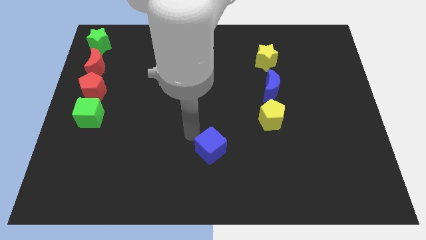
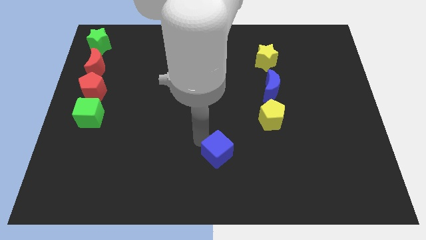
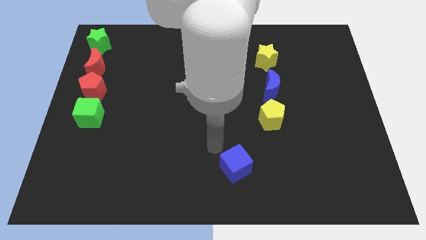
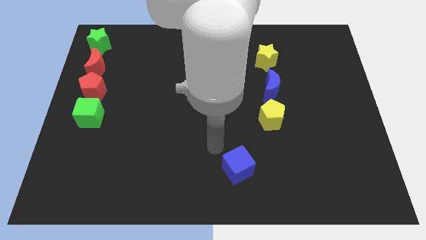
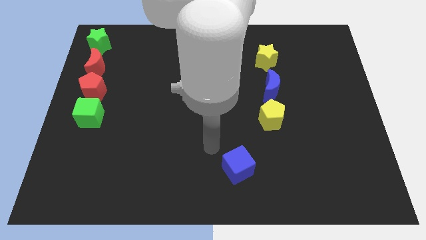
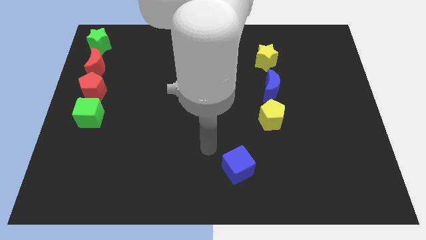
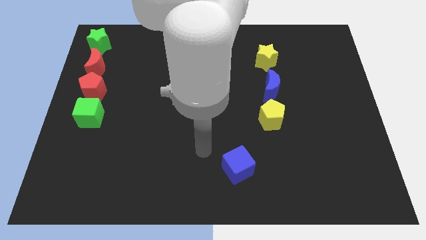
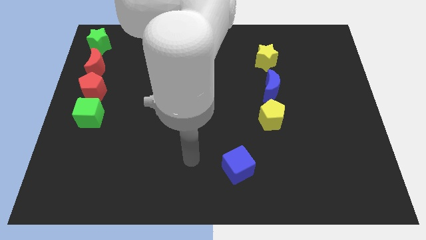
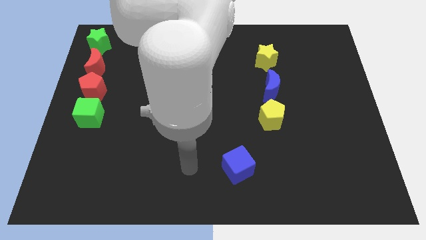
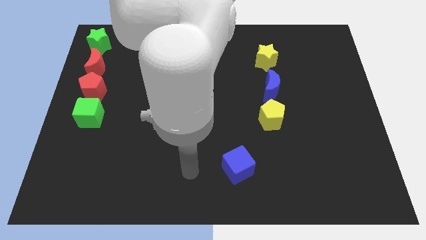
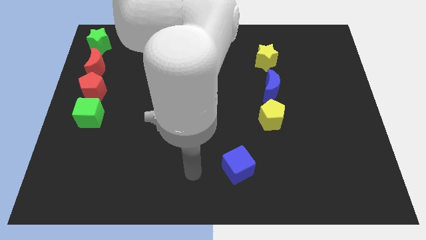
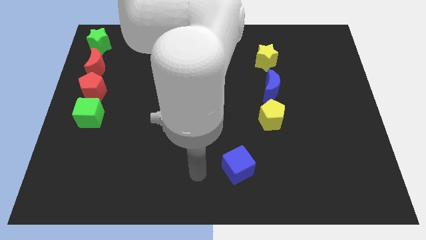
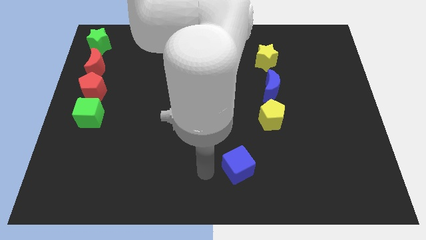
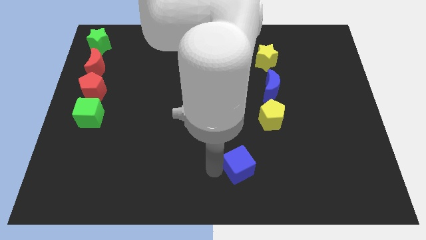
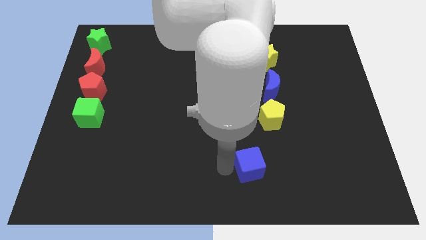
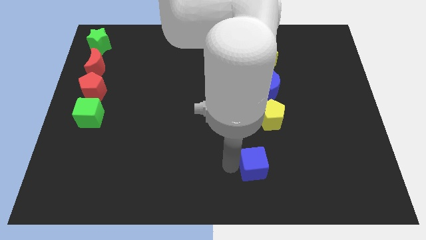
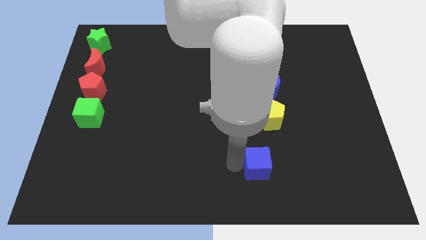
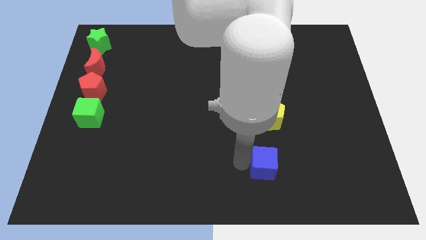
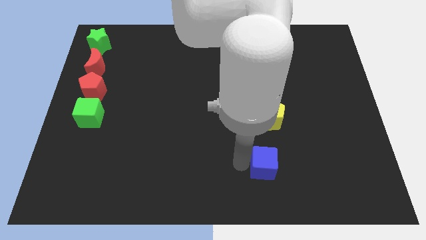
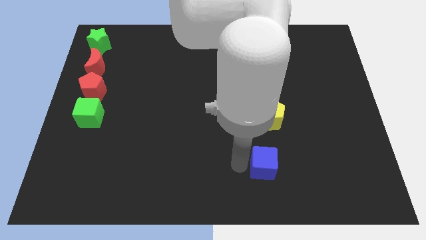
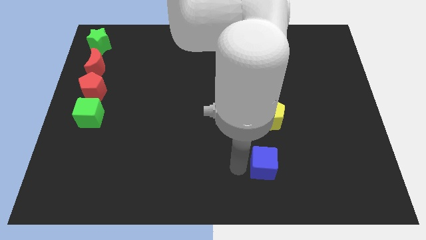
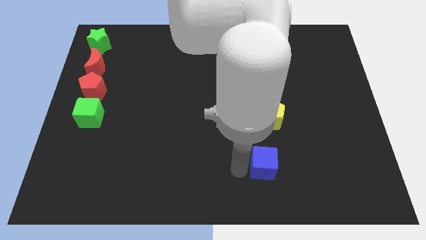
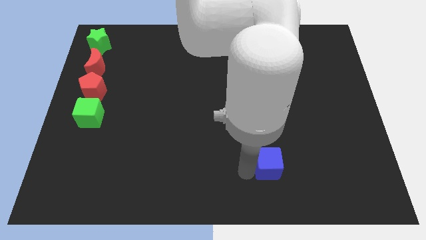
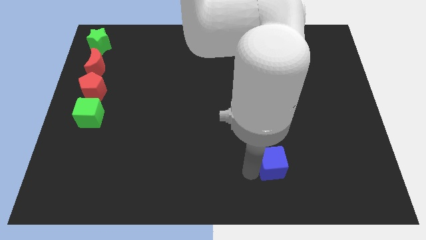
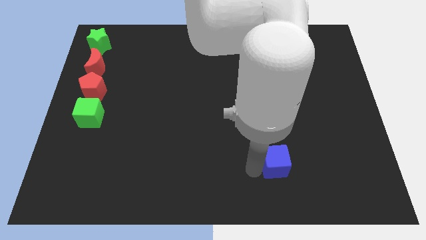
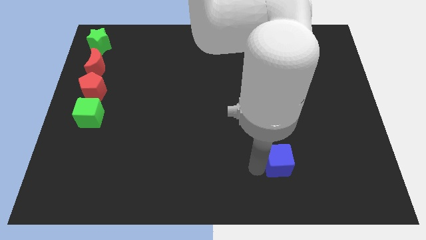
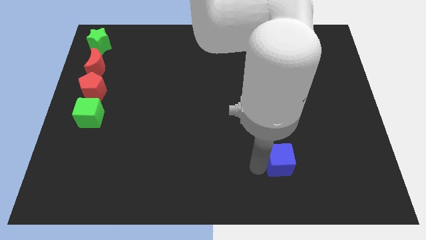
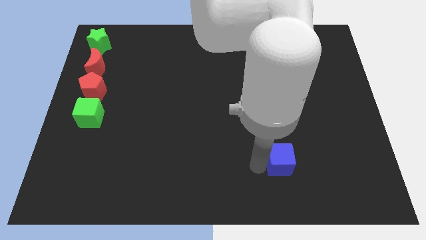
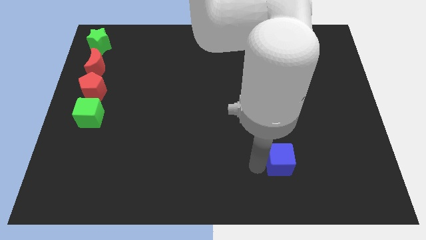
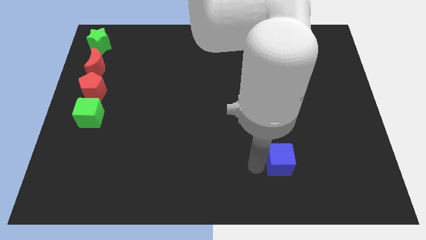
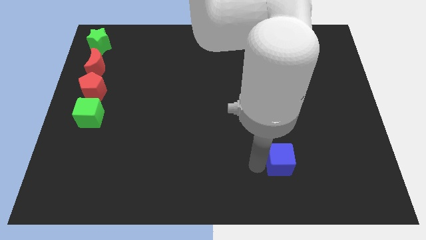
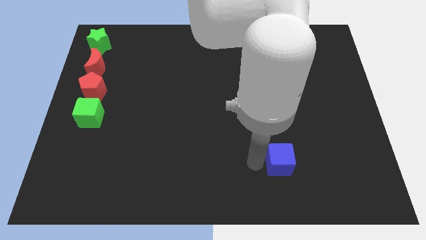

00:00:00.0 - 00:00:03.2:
place blue cube below yellow pentagon

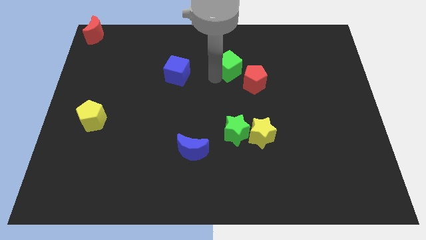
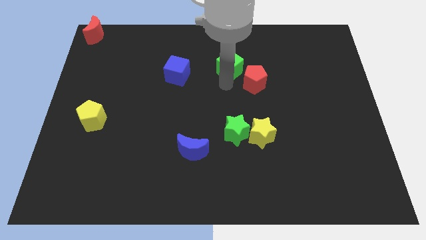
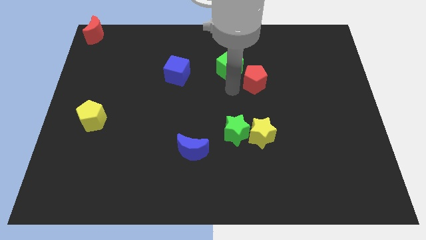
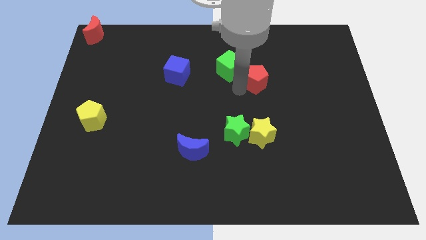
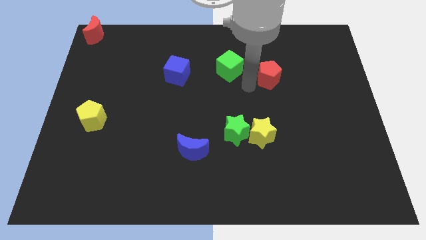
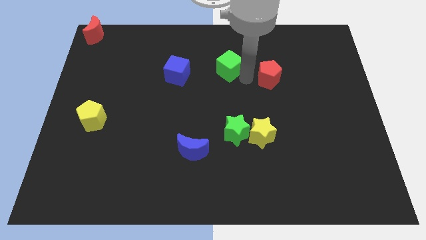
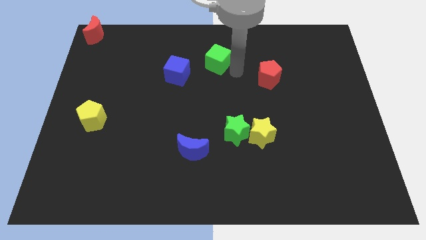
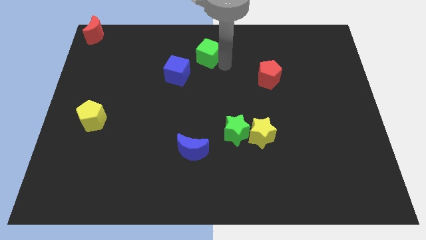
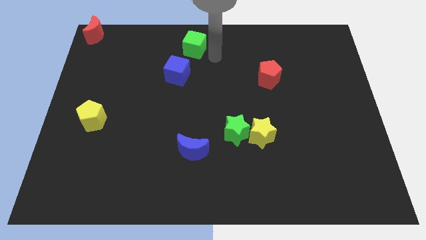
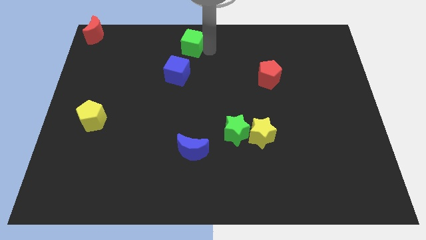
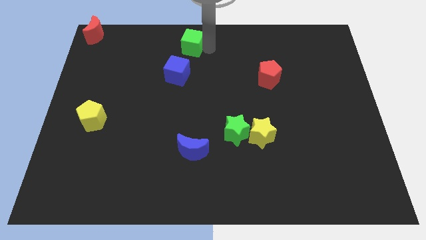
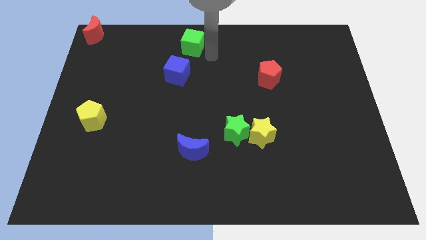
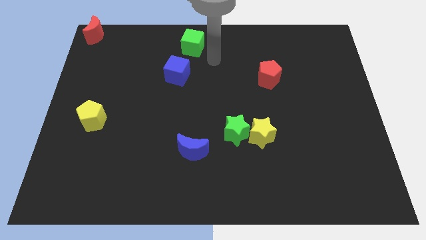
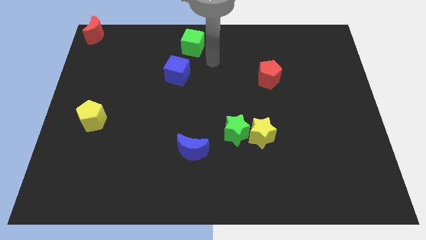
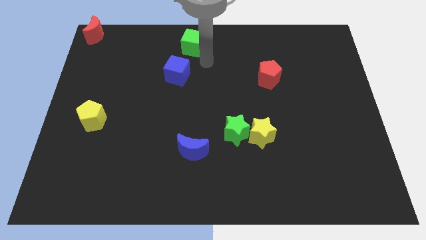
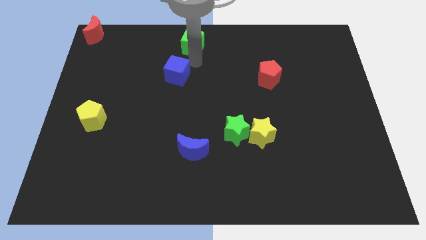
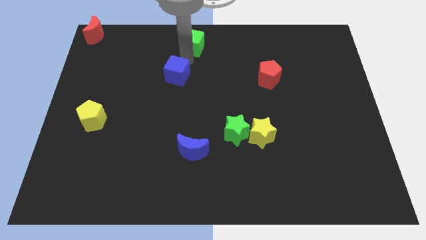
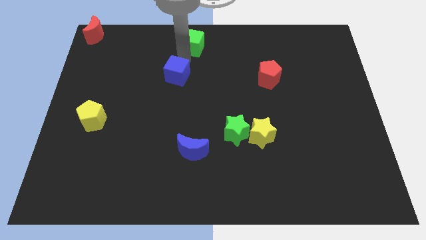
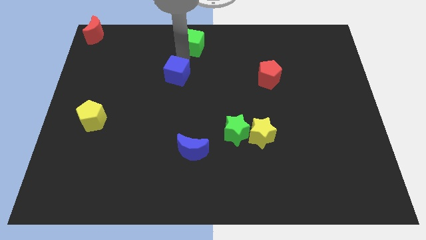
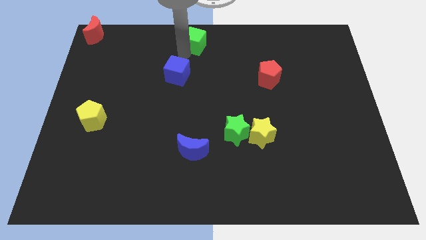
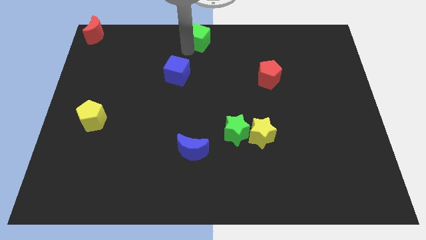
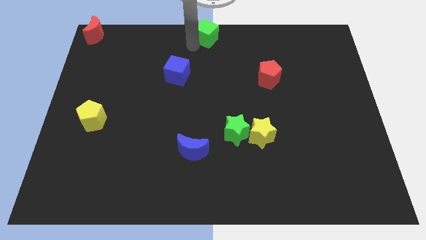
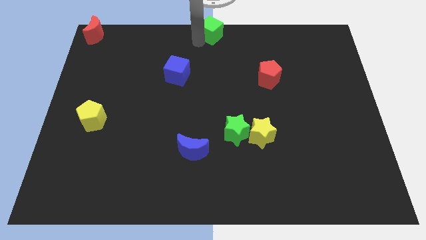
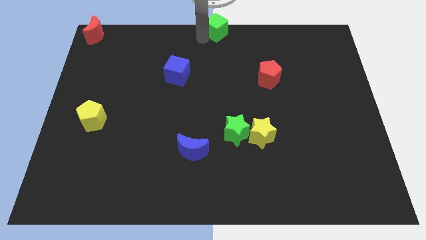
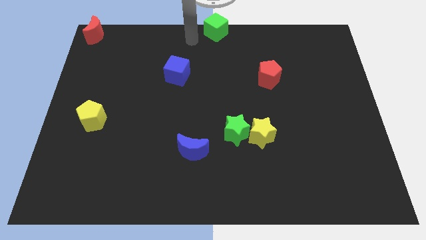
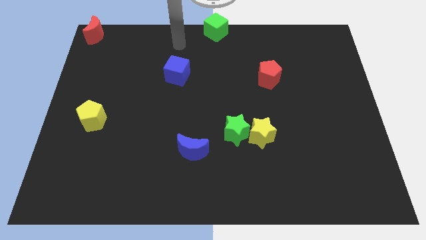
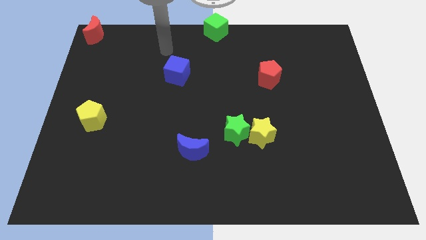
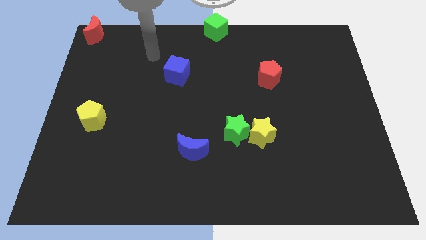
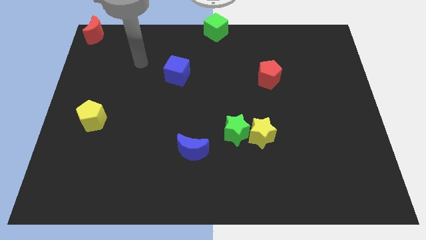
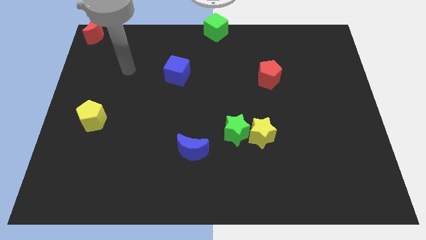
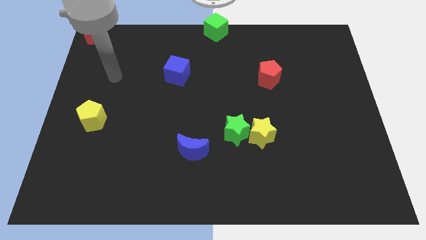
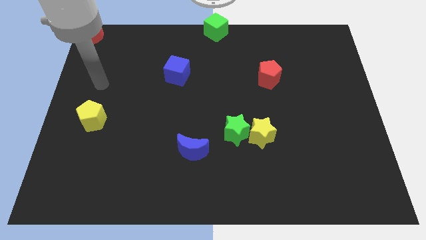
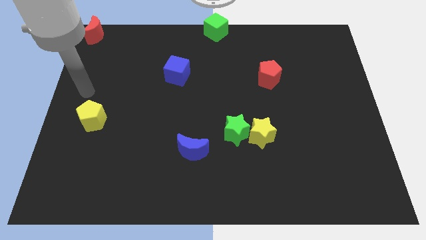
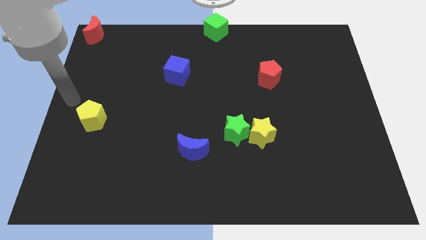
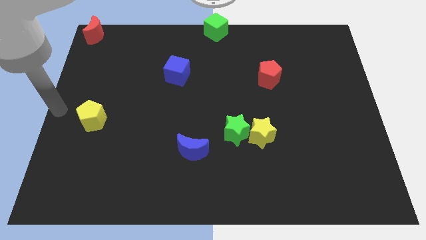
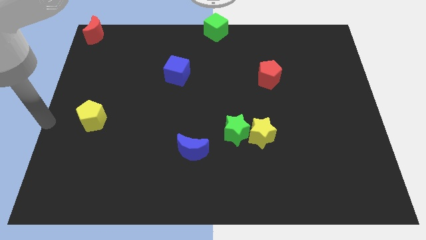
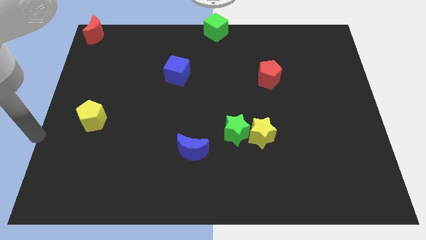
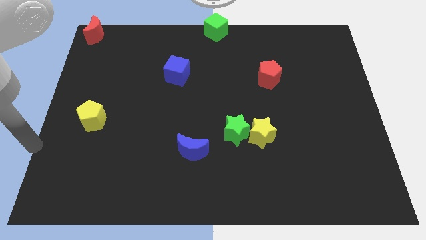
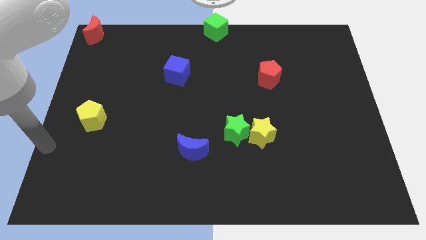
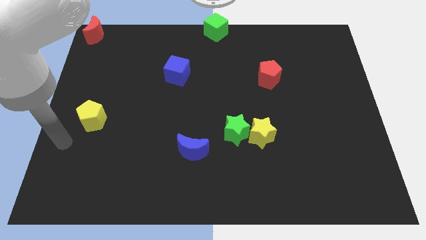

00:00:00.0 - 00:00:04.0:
move the green cube to the top center of the board

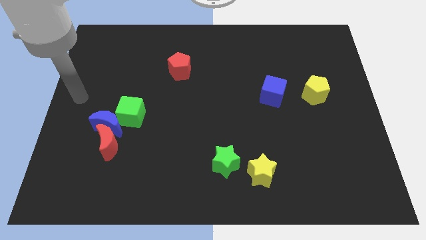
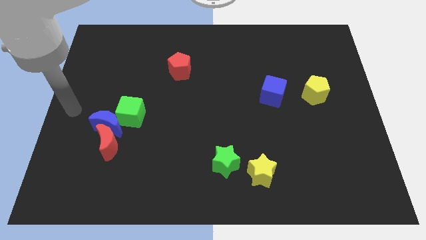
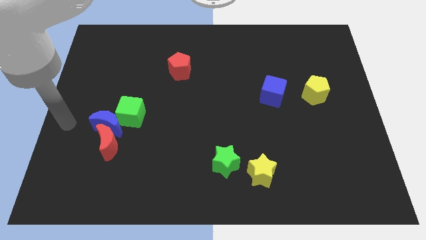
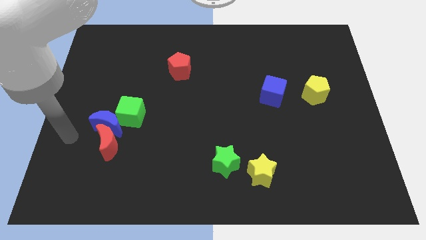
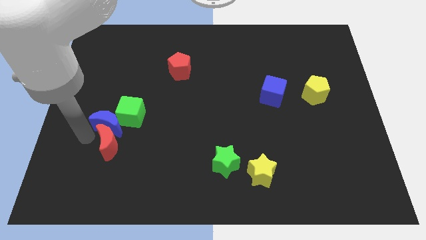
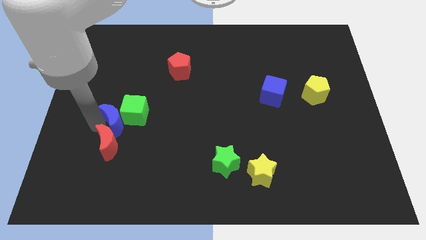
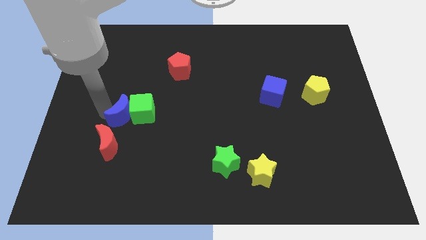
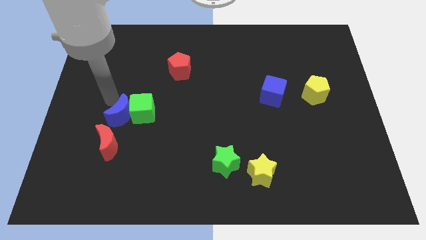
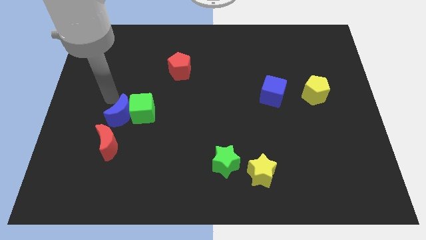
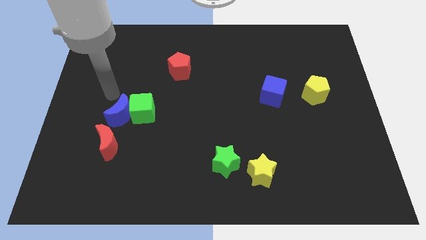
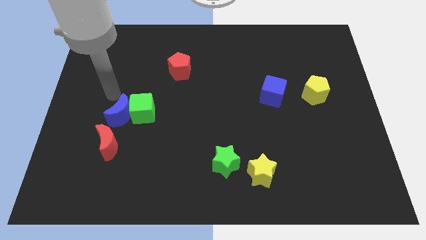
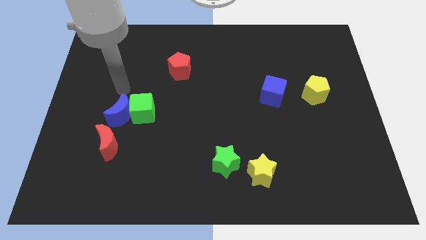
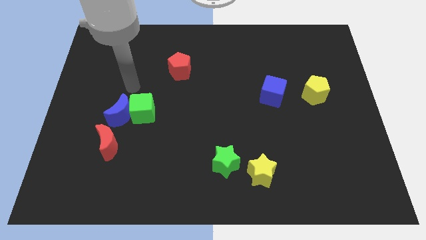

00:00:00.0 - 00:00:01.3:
slightly push the blue moon into the green cube

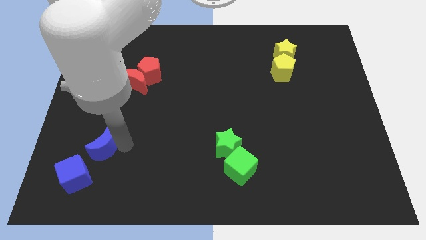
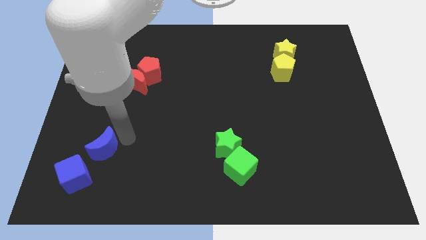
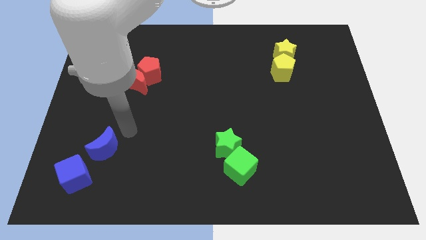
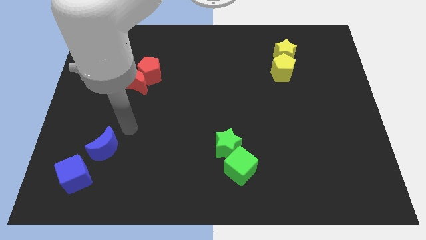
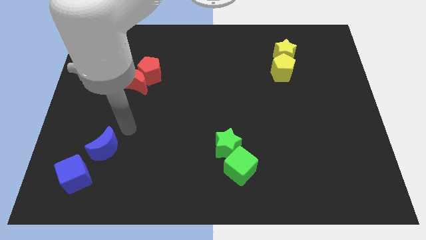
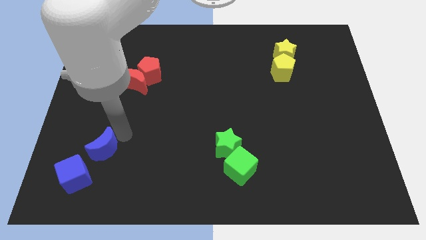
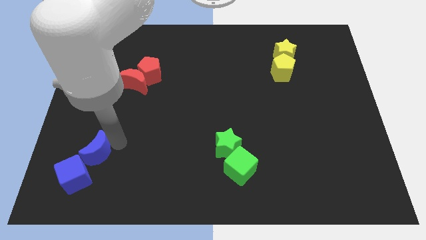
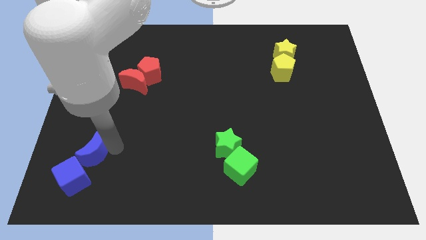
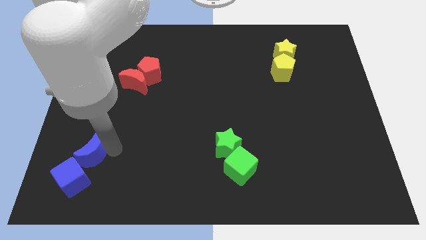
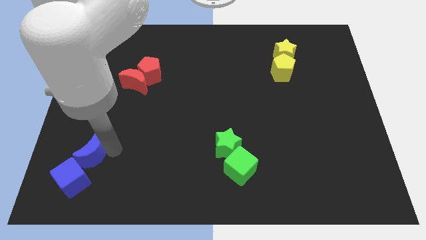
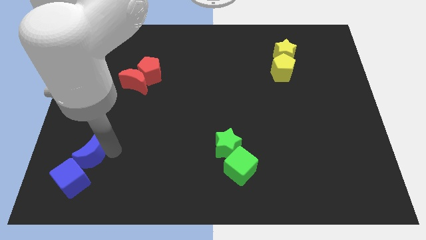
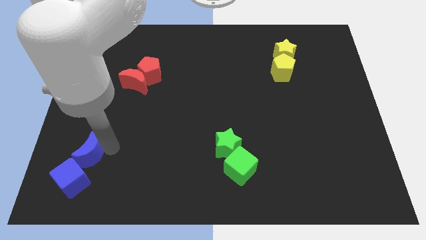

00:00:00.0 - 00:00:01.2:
push the blue crescent into the blue cube
